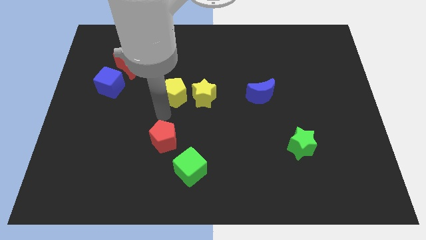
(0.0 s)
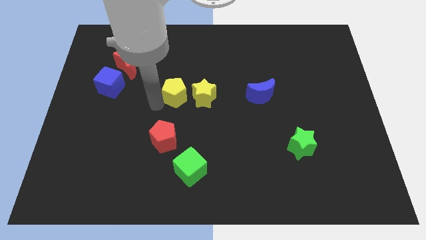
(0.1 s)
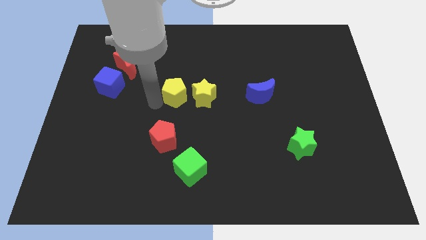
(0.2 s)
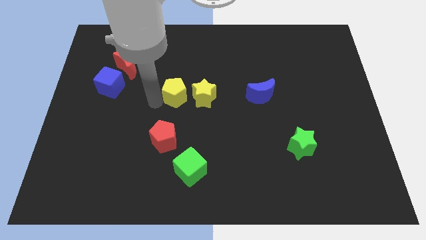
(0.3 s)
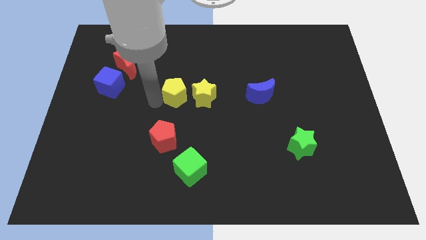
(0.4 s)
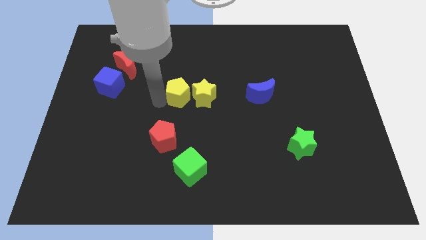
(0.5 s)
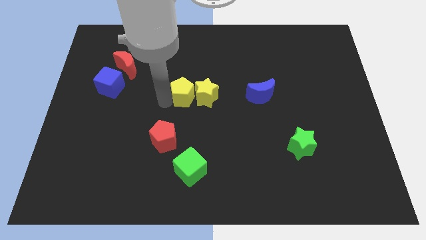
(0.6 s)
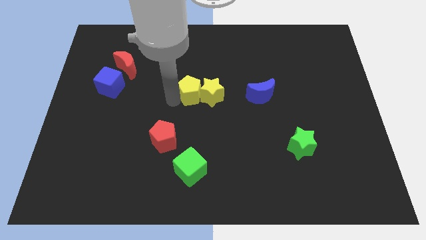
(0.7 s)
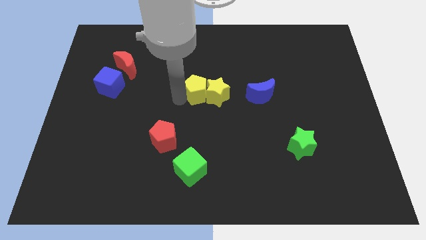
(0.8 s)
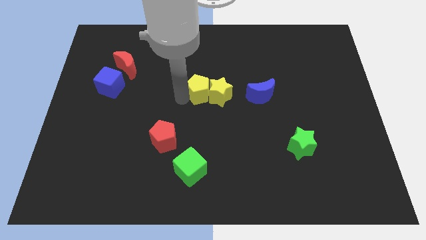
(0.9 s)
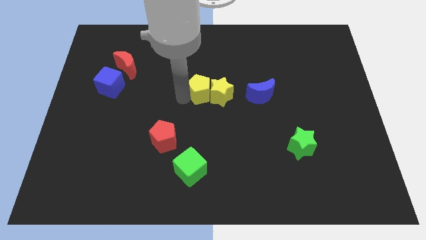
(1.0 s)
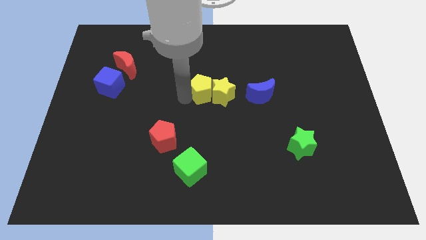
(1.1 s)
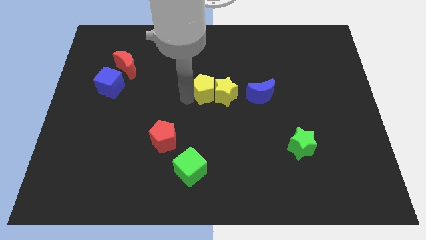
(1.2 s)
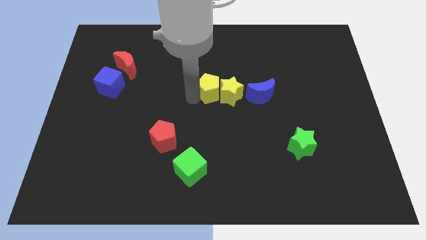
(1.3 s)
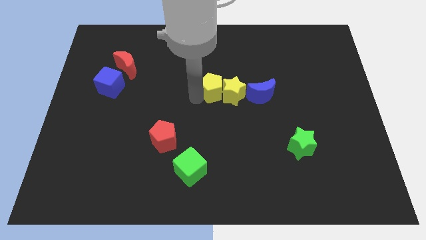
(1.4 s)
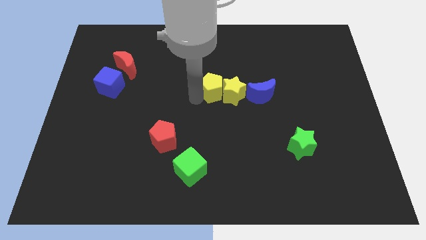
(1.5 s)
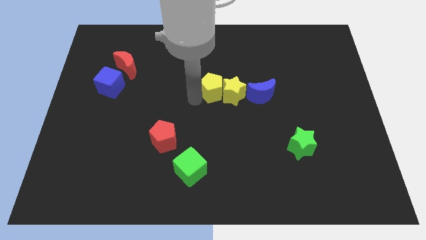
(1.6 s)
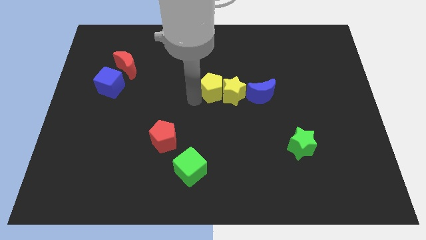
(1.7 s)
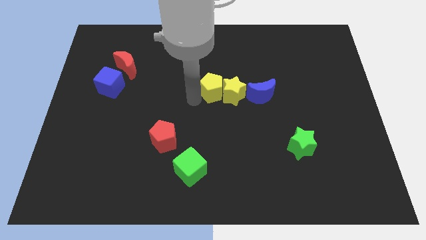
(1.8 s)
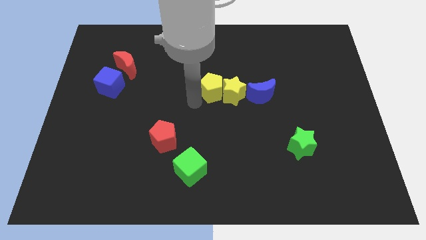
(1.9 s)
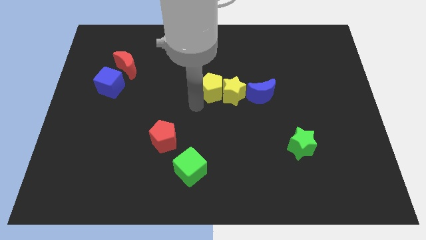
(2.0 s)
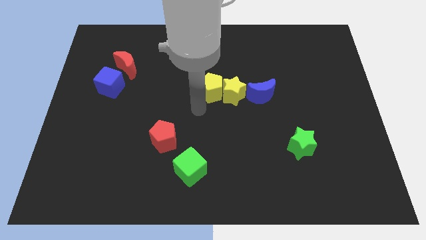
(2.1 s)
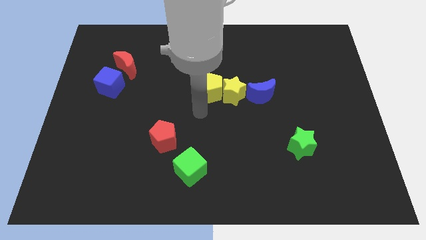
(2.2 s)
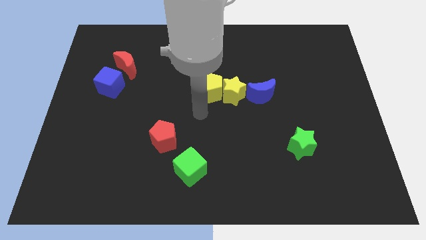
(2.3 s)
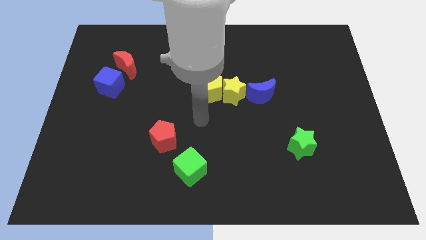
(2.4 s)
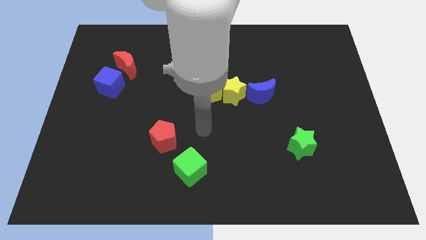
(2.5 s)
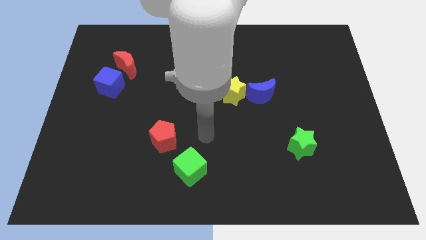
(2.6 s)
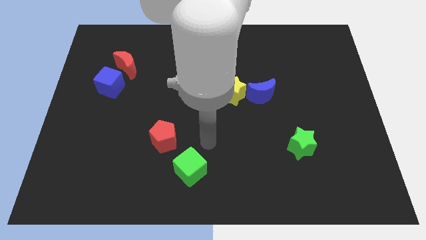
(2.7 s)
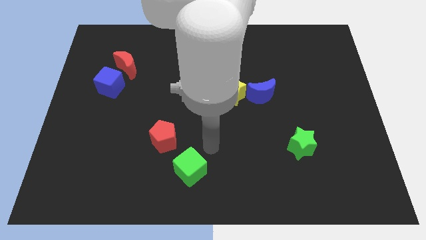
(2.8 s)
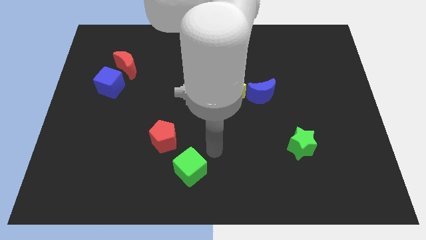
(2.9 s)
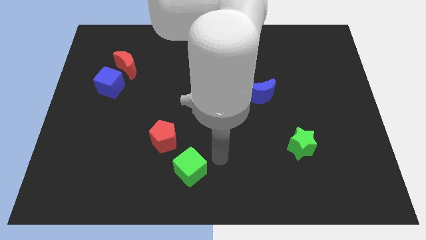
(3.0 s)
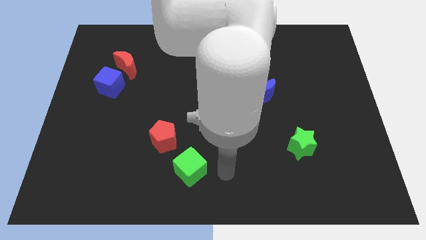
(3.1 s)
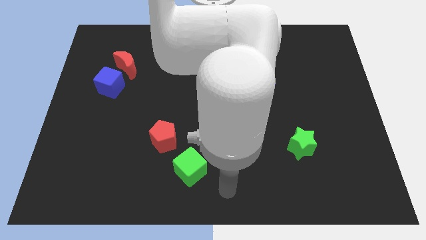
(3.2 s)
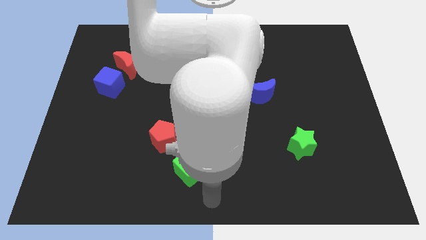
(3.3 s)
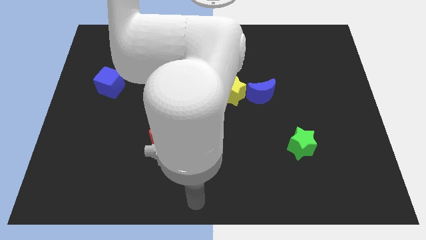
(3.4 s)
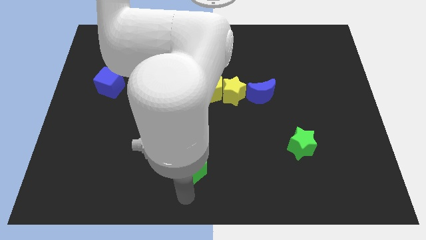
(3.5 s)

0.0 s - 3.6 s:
place the arm down to the green cube

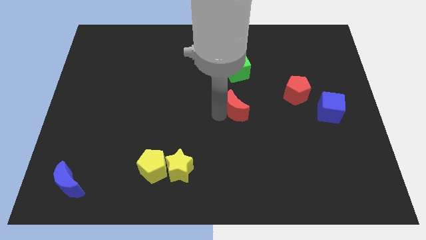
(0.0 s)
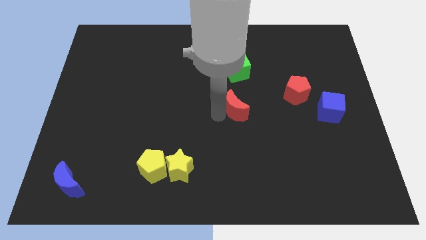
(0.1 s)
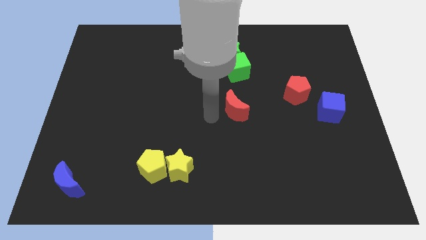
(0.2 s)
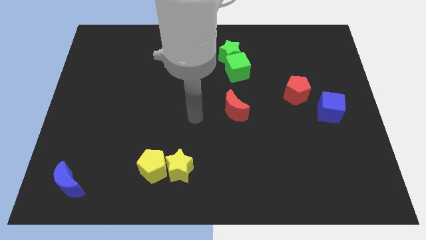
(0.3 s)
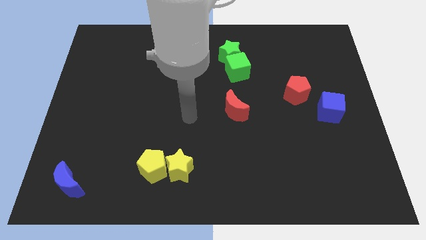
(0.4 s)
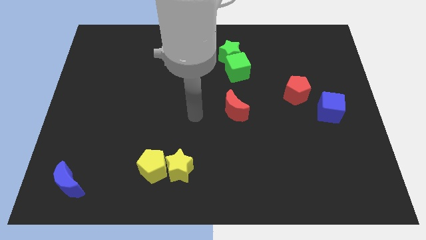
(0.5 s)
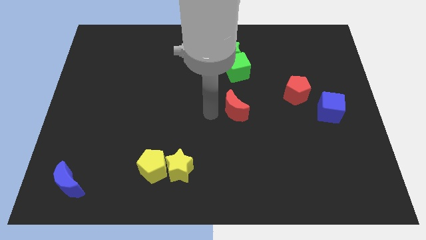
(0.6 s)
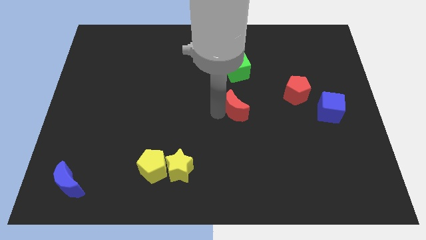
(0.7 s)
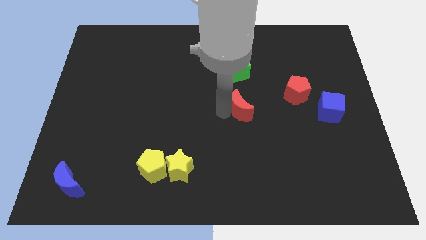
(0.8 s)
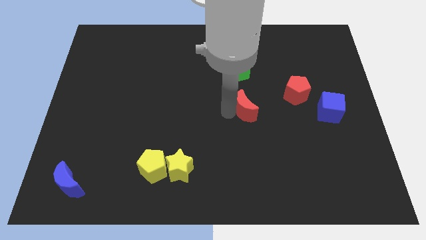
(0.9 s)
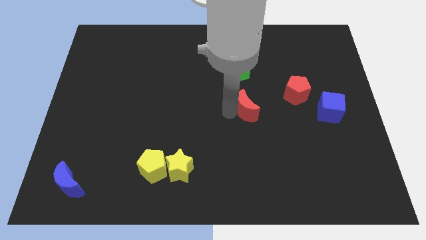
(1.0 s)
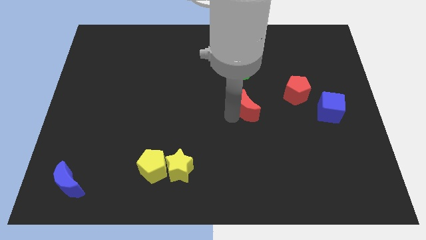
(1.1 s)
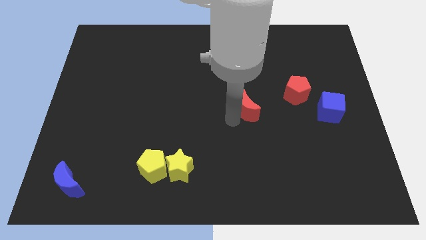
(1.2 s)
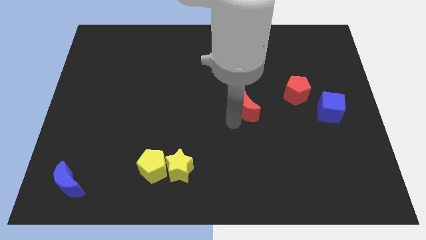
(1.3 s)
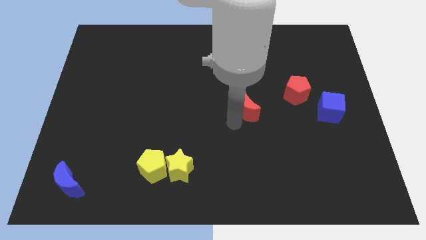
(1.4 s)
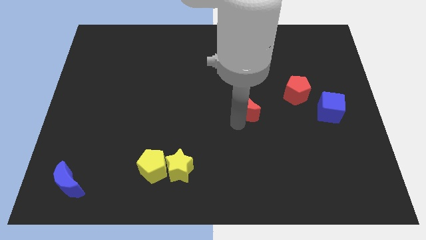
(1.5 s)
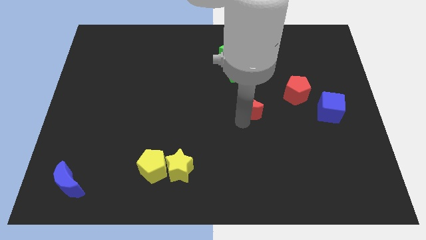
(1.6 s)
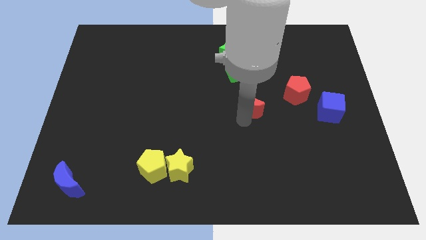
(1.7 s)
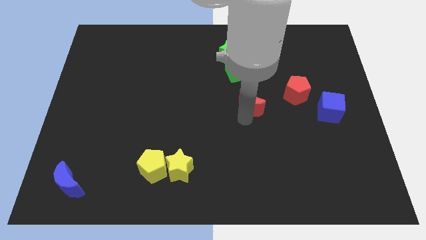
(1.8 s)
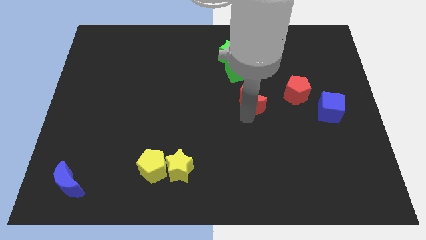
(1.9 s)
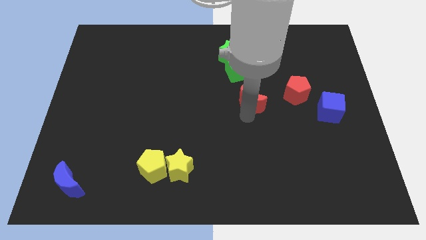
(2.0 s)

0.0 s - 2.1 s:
move the red crescent slightly towards the red pentagon

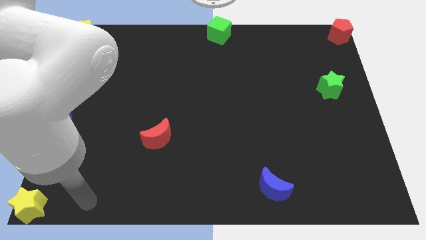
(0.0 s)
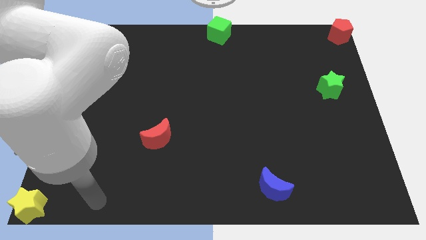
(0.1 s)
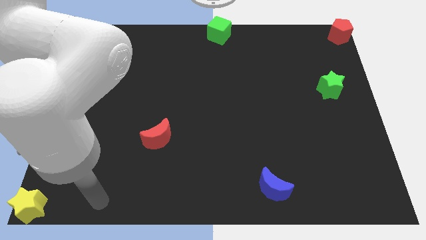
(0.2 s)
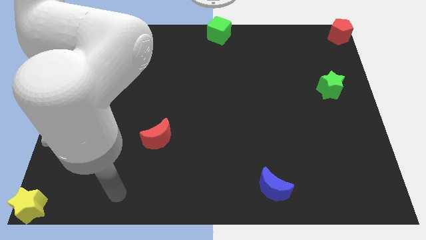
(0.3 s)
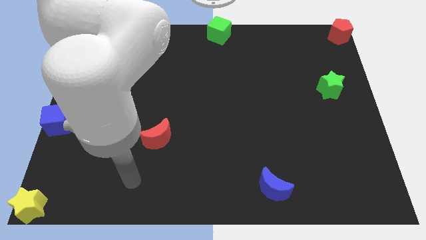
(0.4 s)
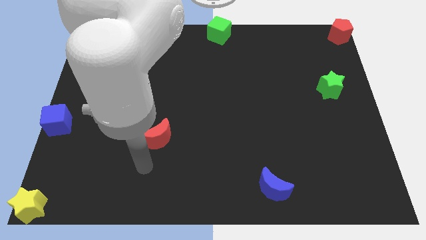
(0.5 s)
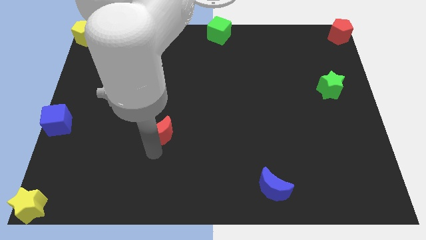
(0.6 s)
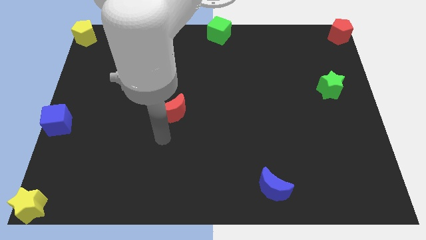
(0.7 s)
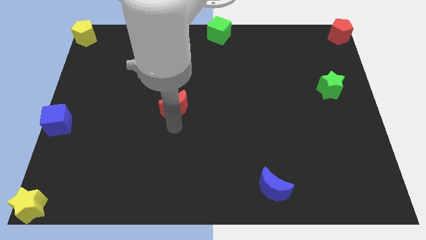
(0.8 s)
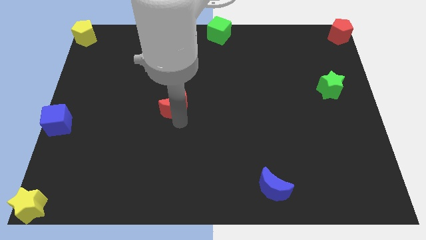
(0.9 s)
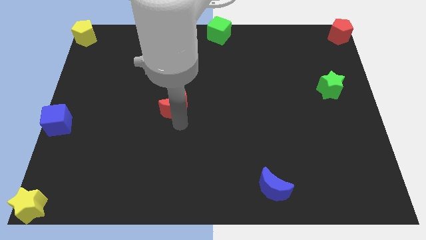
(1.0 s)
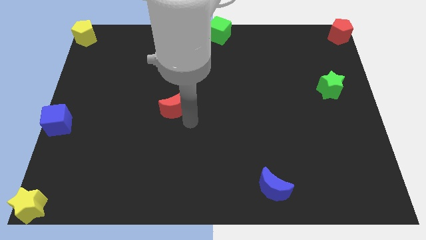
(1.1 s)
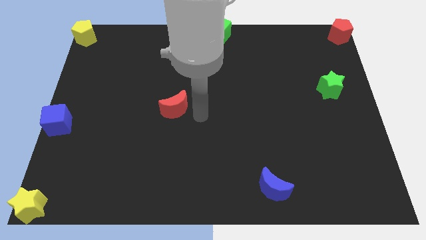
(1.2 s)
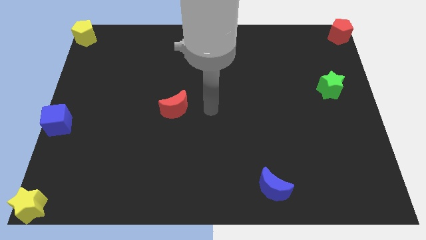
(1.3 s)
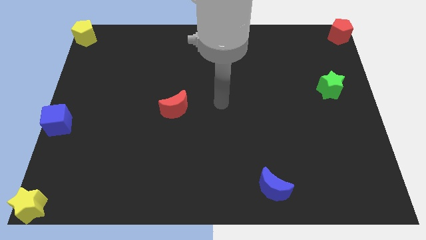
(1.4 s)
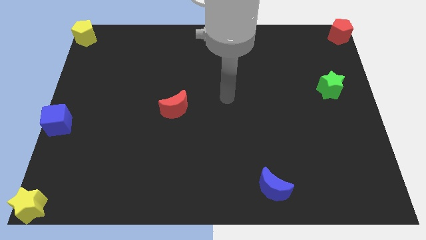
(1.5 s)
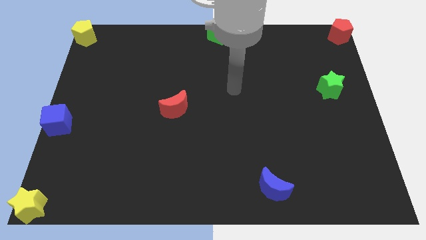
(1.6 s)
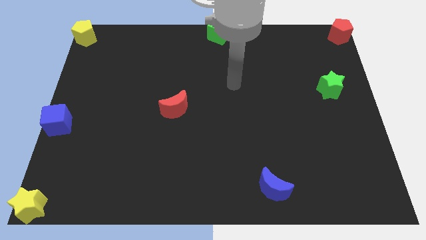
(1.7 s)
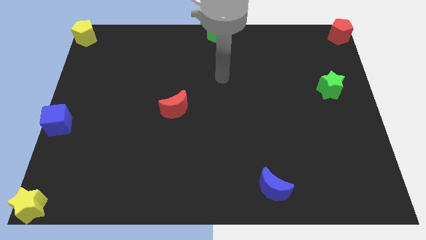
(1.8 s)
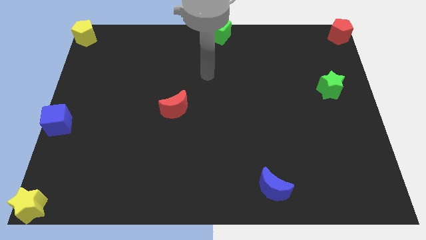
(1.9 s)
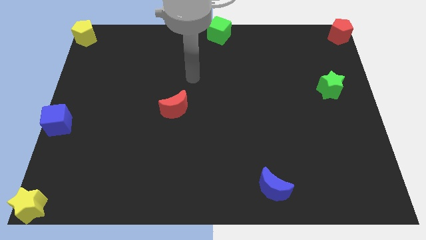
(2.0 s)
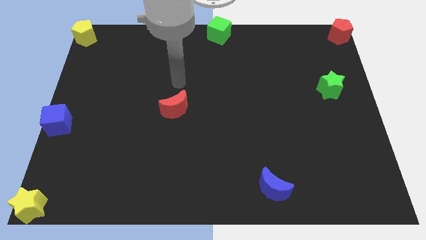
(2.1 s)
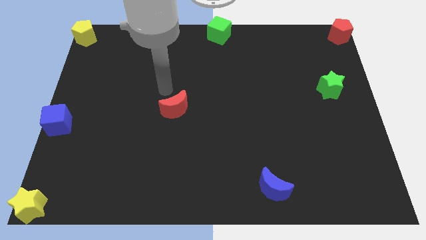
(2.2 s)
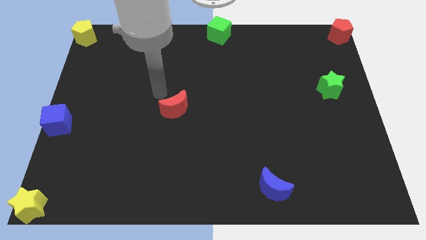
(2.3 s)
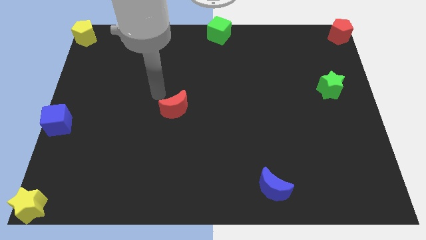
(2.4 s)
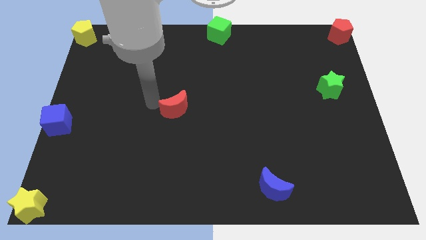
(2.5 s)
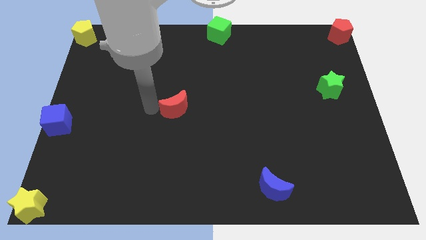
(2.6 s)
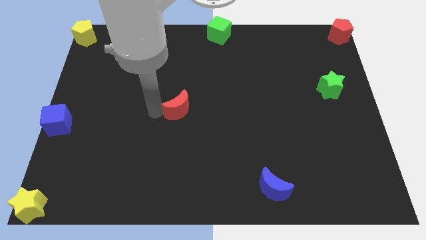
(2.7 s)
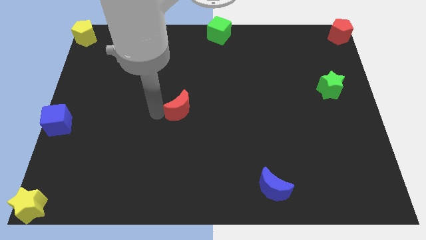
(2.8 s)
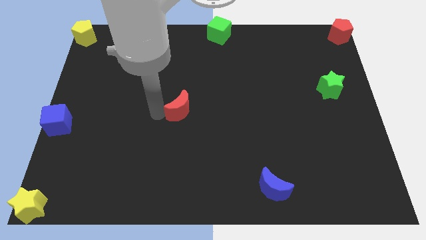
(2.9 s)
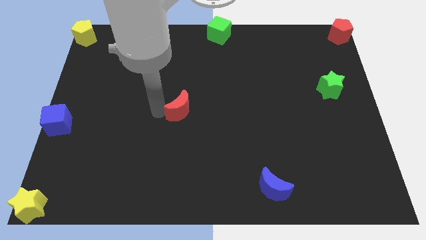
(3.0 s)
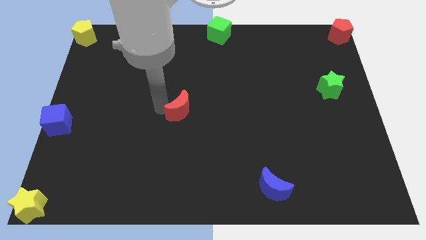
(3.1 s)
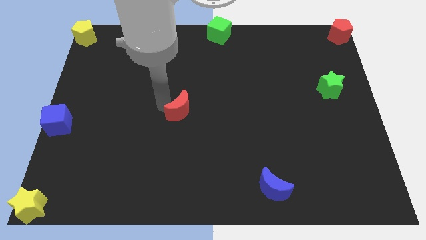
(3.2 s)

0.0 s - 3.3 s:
place the red crescent at center of the board

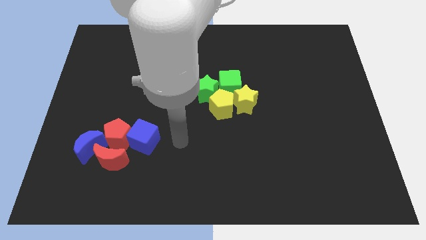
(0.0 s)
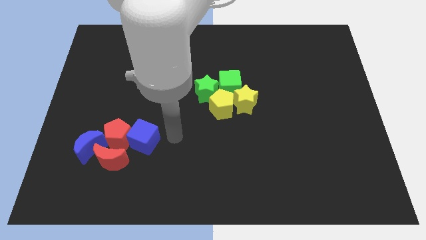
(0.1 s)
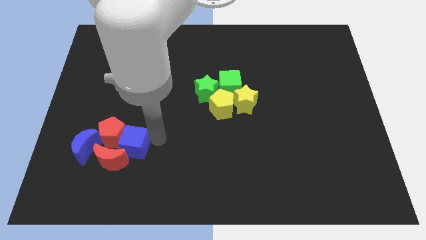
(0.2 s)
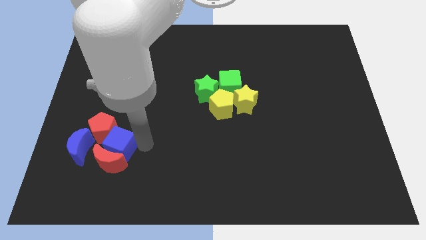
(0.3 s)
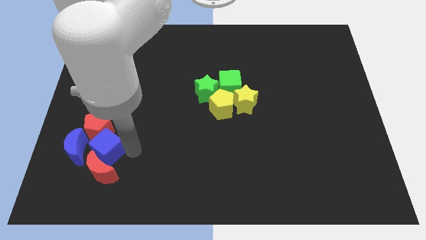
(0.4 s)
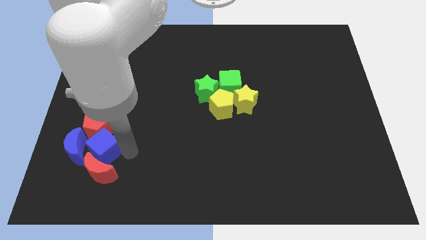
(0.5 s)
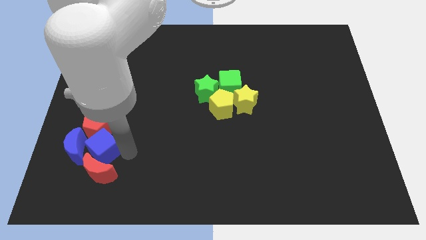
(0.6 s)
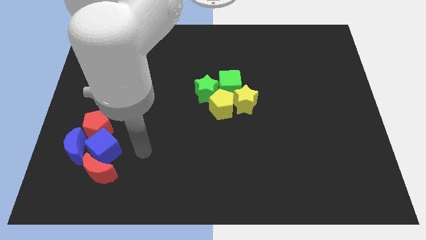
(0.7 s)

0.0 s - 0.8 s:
move the blue cube in between the red blocks
